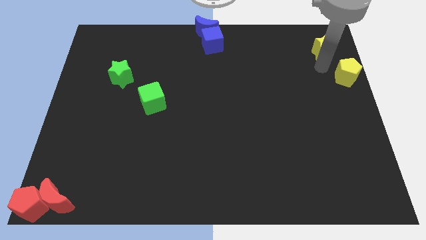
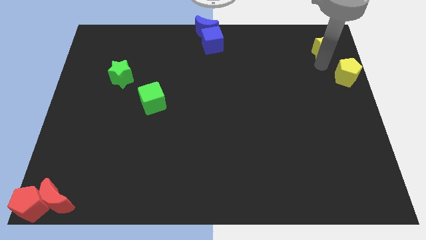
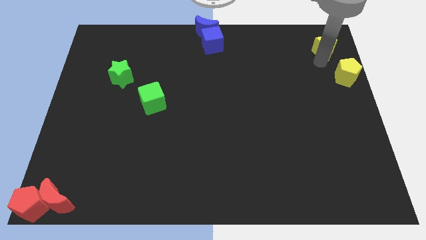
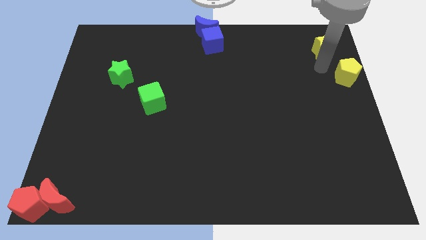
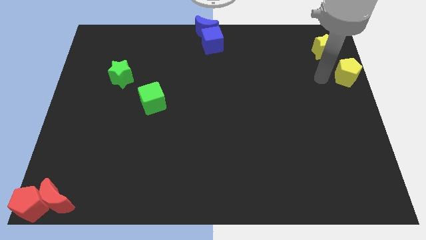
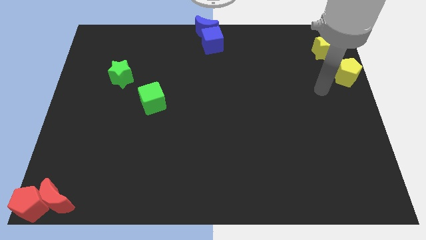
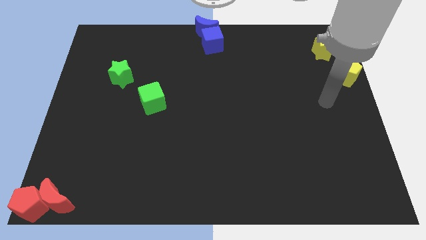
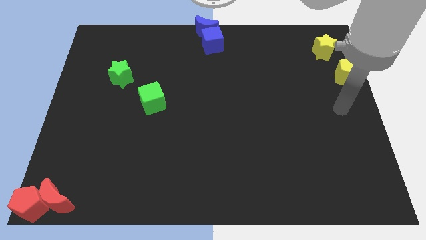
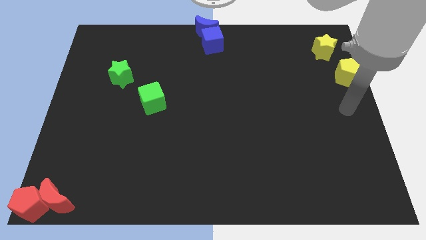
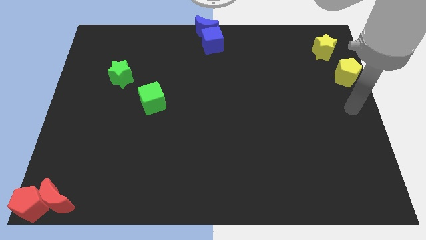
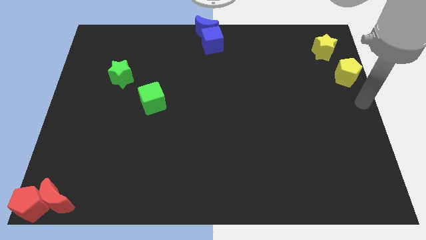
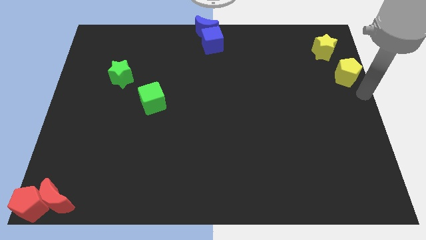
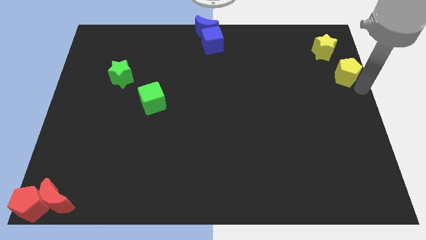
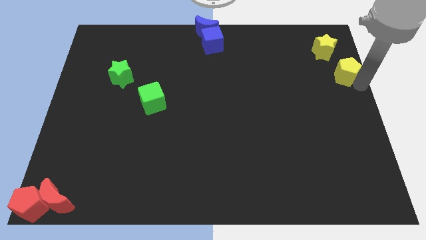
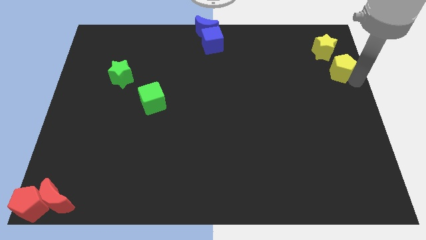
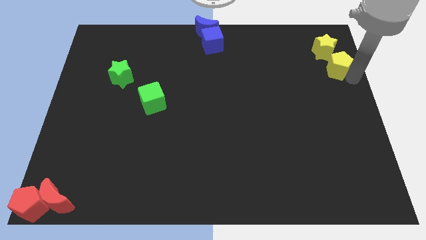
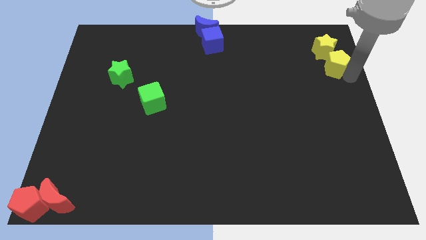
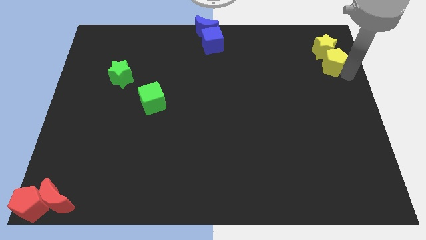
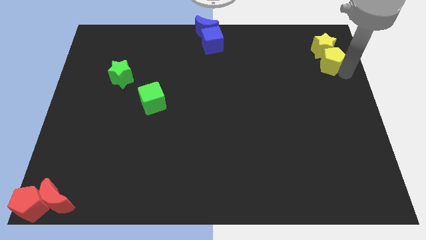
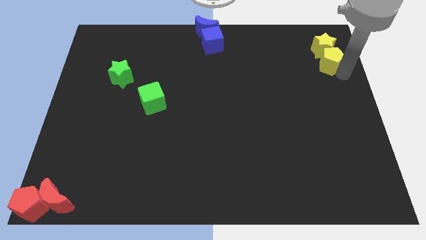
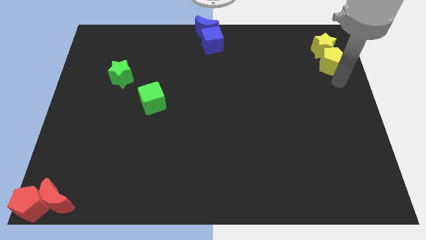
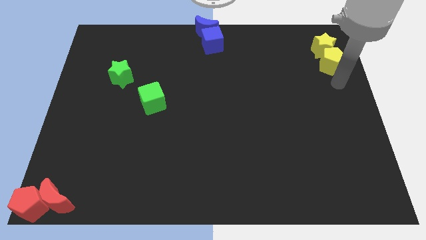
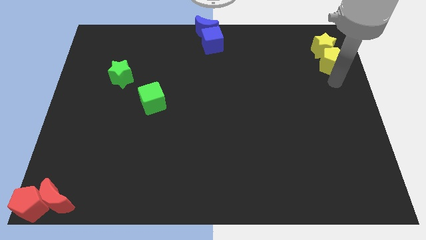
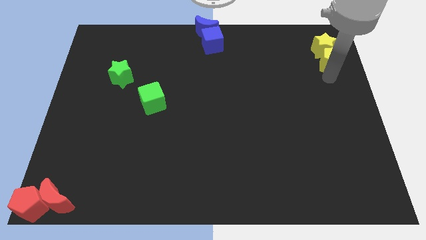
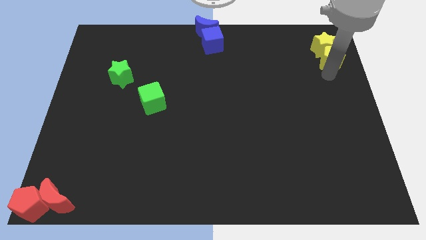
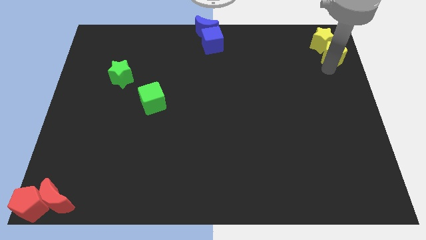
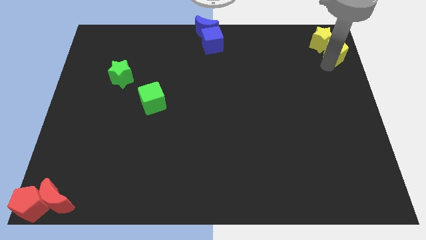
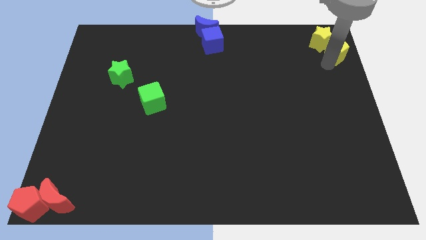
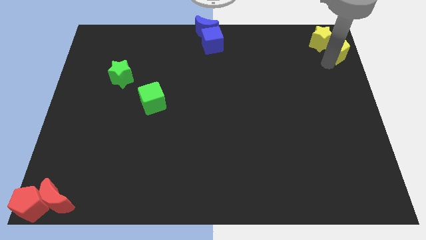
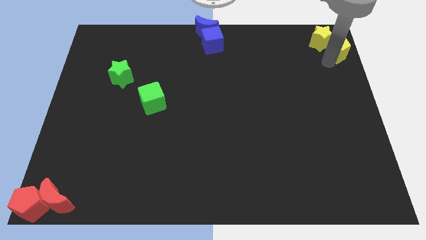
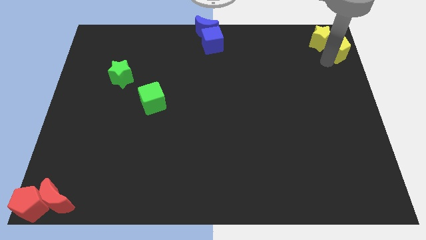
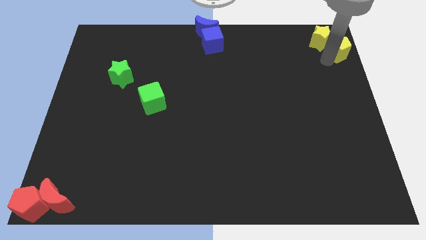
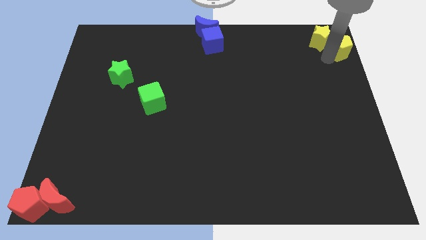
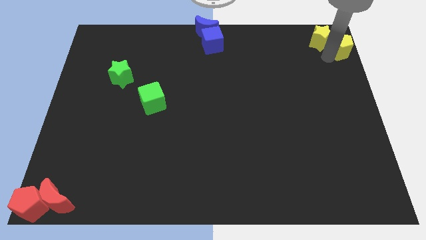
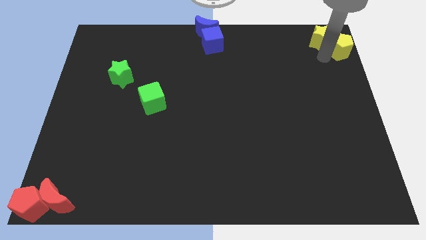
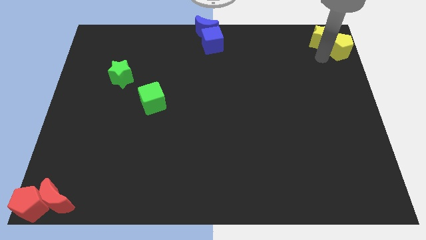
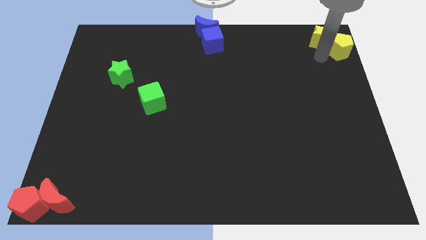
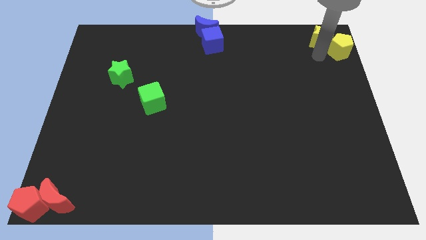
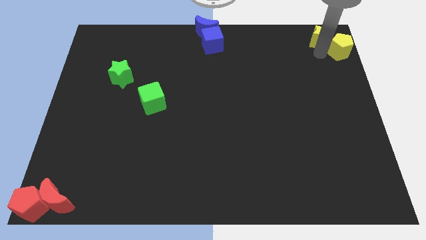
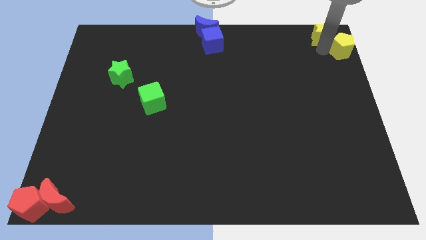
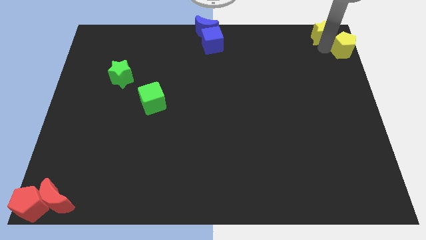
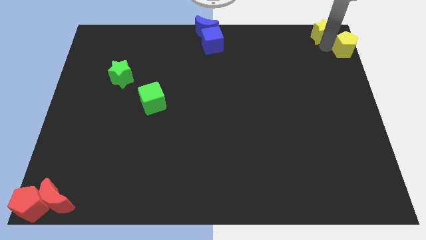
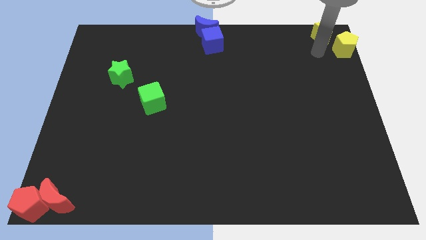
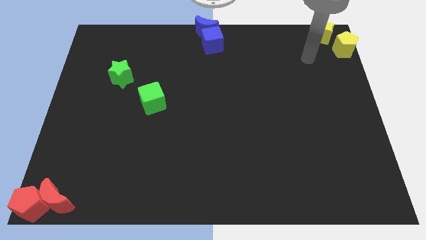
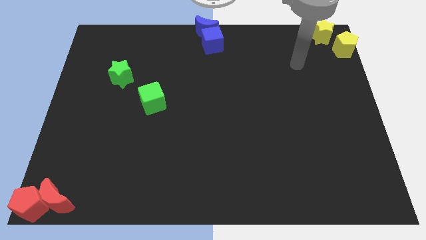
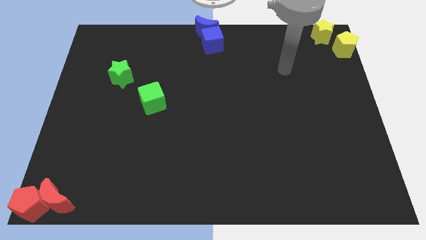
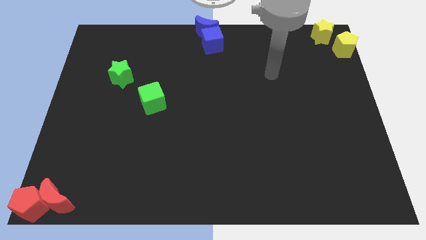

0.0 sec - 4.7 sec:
place the yellow pentagon and the yellow star at the top right side corner

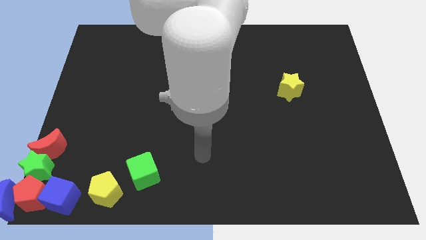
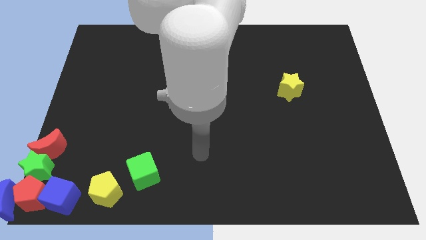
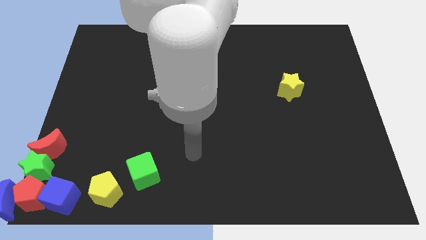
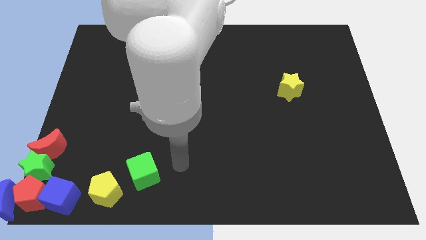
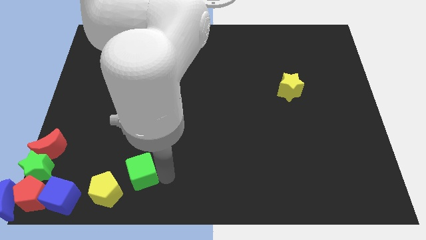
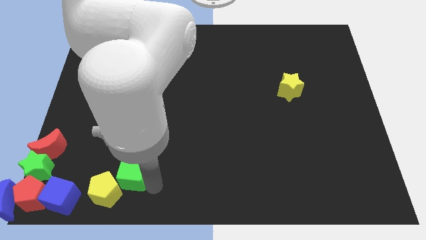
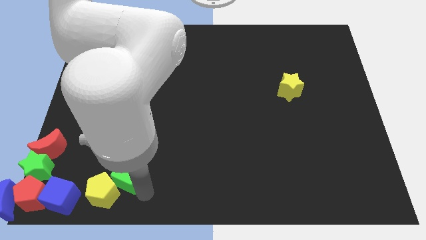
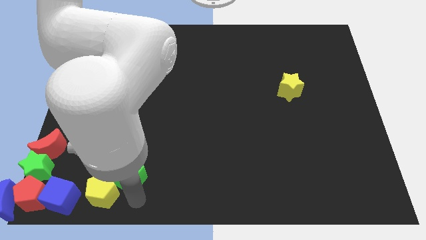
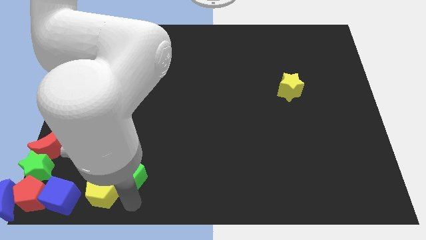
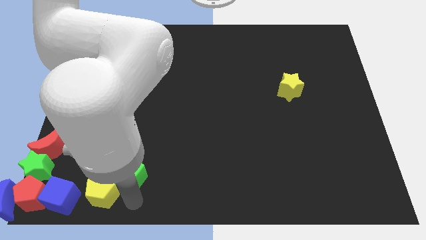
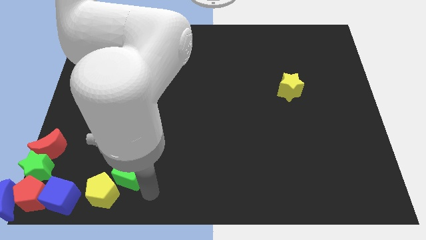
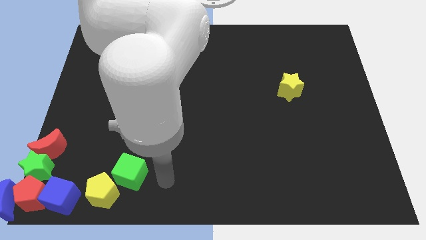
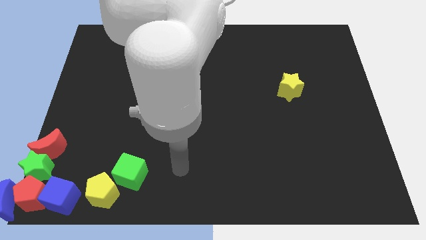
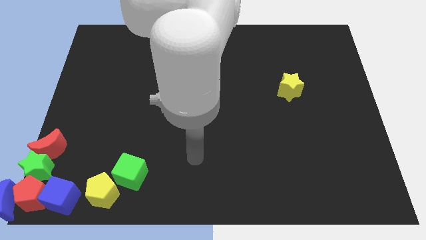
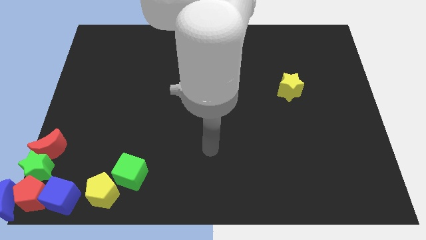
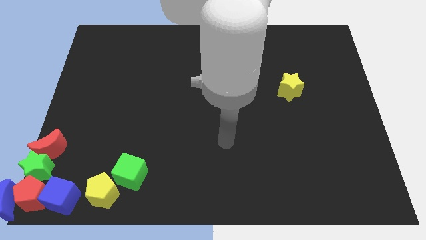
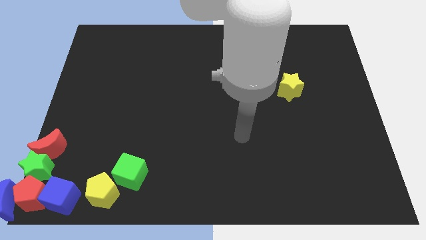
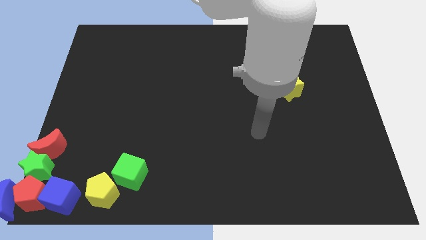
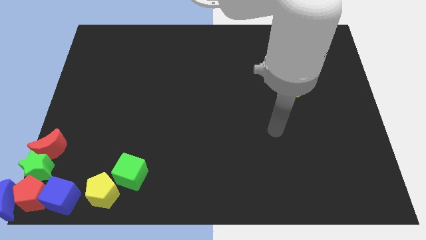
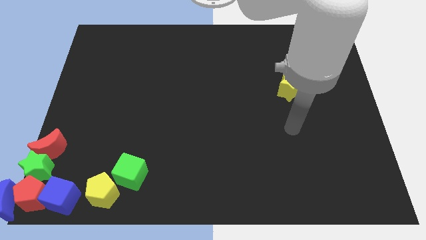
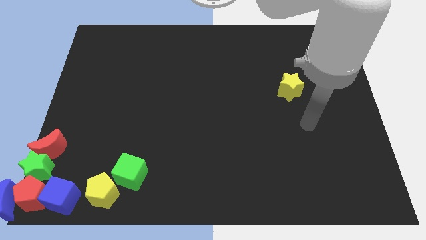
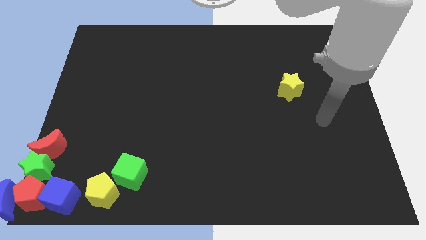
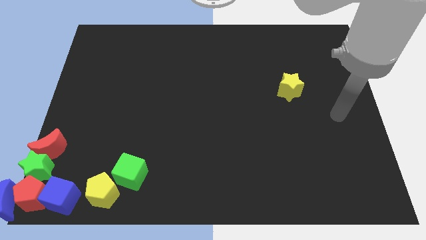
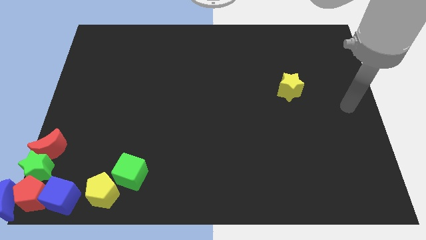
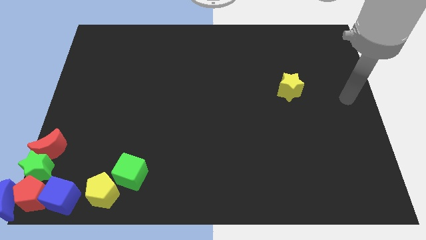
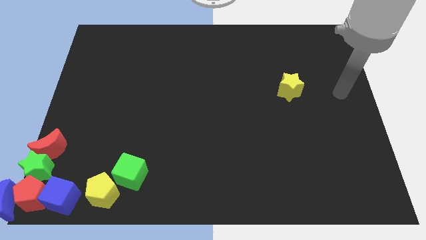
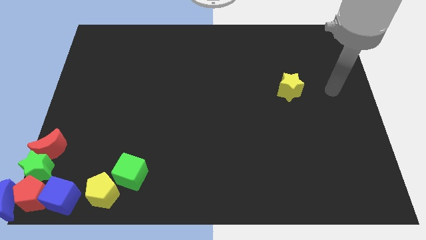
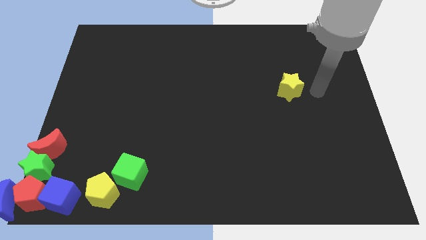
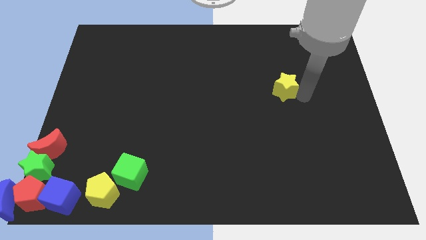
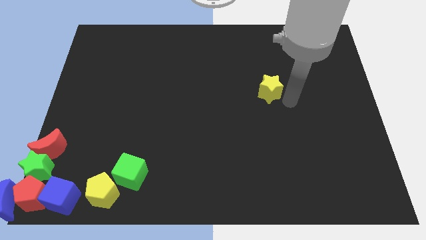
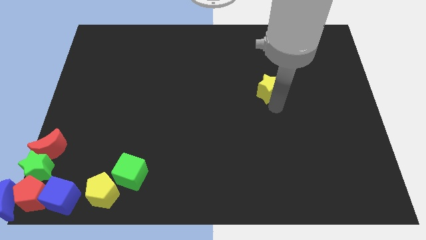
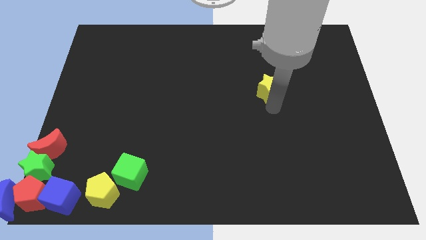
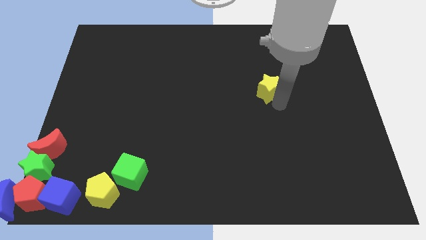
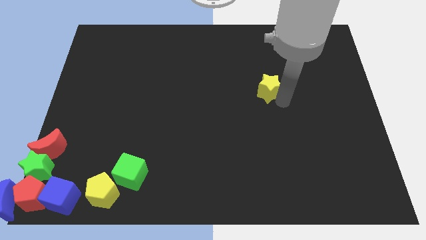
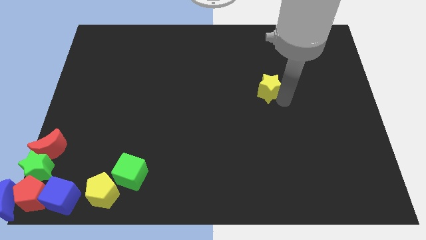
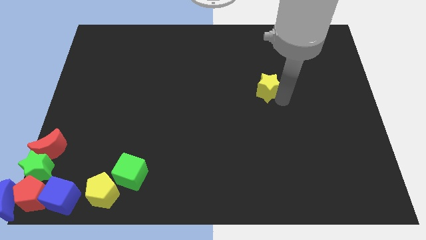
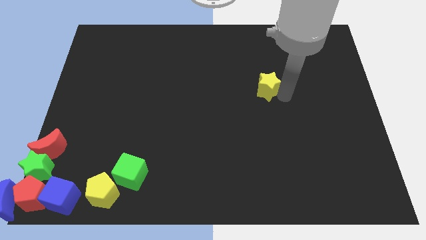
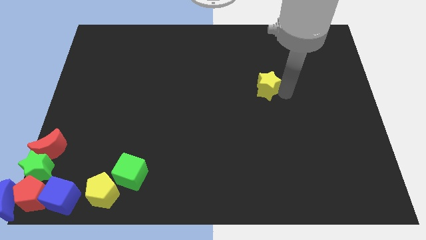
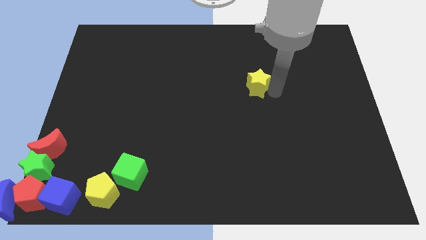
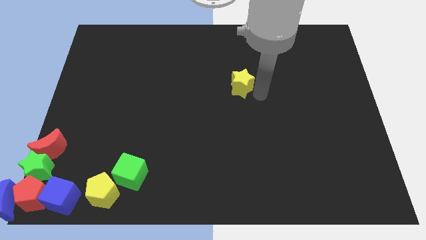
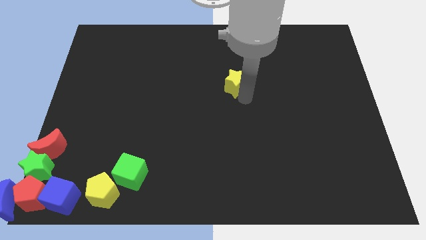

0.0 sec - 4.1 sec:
push the green cube into the yellow pentagon
